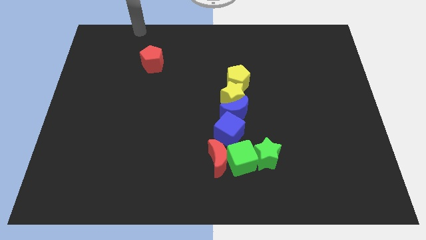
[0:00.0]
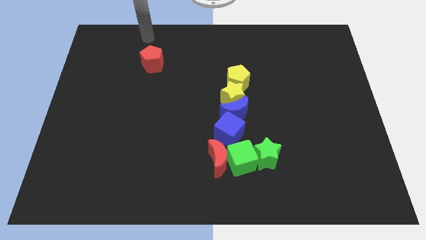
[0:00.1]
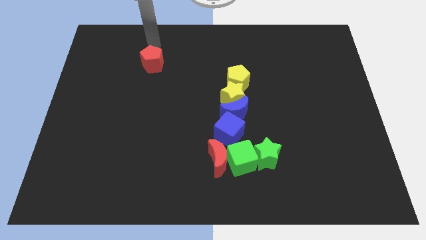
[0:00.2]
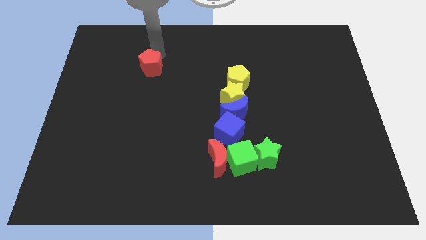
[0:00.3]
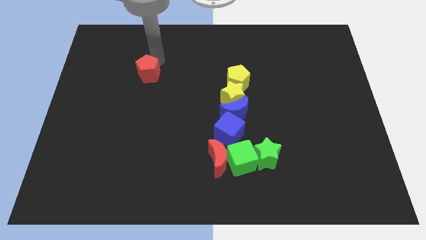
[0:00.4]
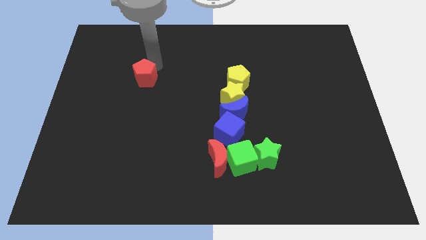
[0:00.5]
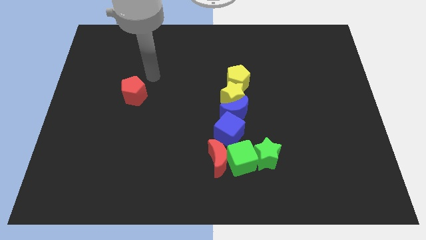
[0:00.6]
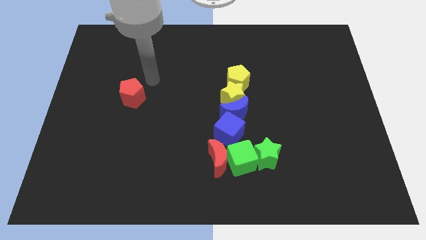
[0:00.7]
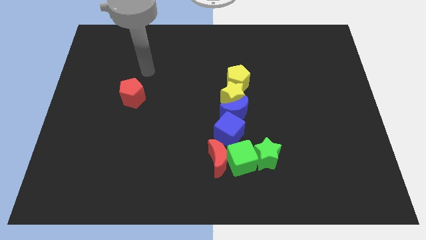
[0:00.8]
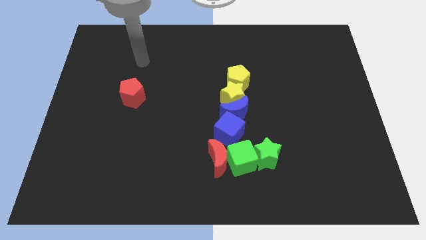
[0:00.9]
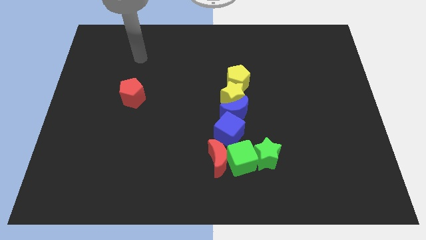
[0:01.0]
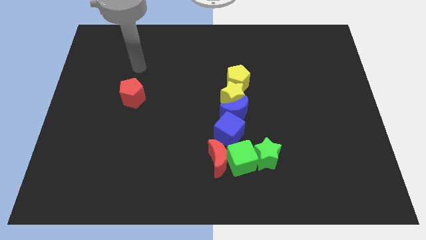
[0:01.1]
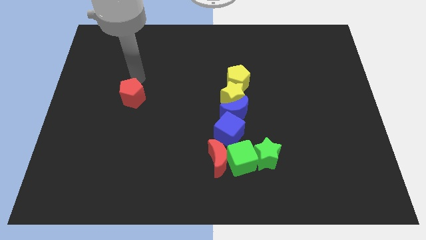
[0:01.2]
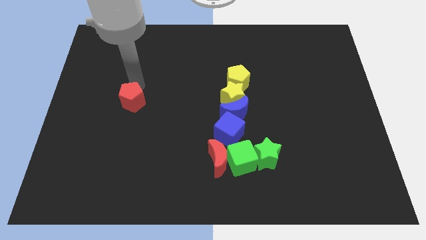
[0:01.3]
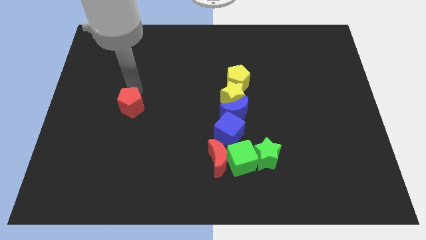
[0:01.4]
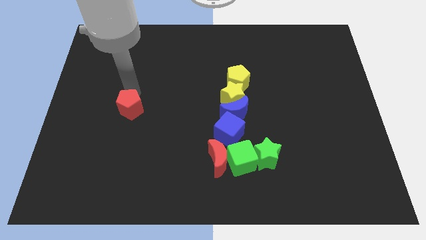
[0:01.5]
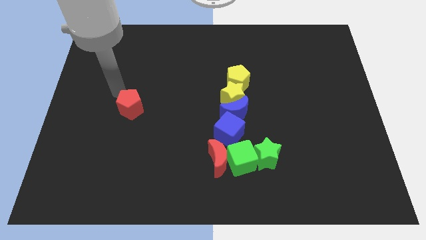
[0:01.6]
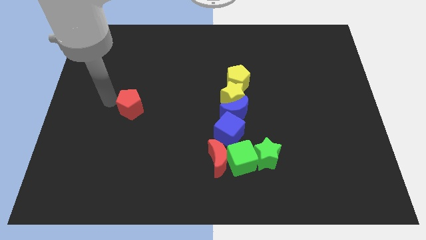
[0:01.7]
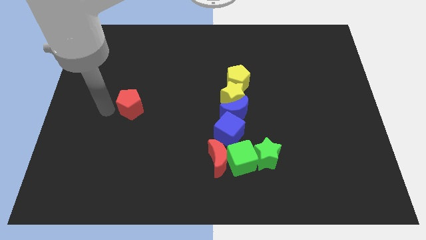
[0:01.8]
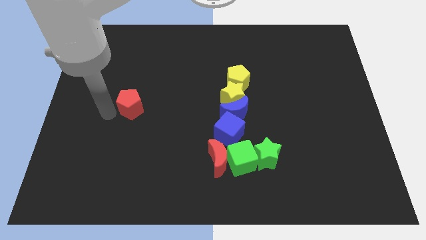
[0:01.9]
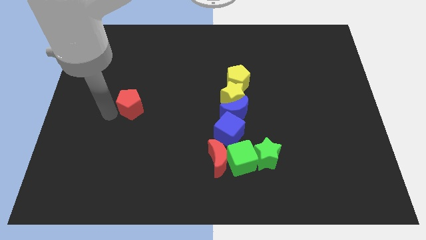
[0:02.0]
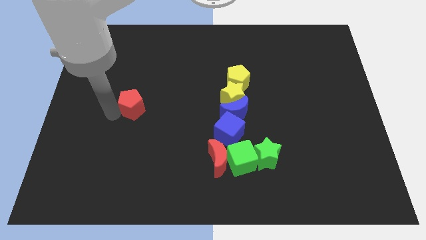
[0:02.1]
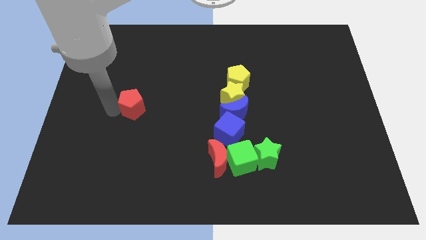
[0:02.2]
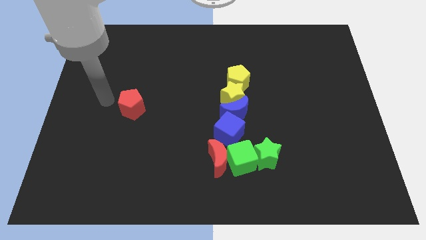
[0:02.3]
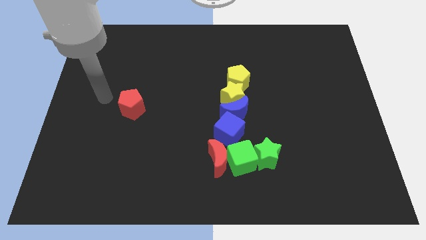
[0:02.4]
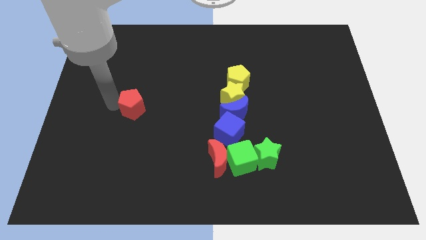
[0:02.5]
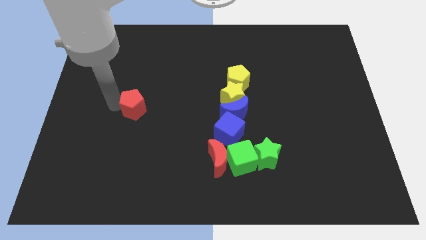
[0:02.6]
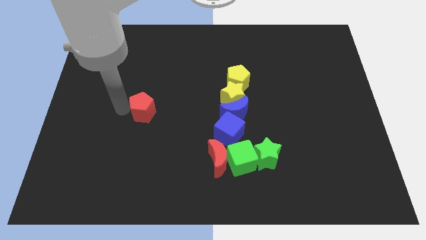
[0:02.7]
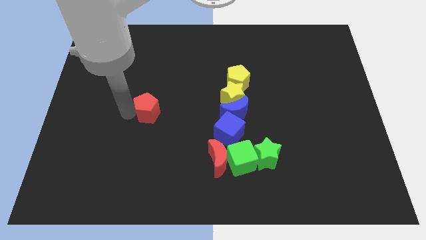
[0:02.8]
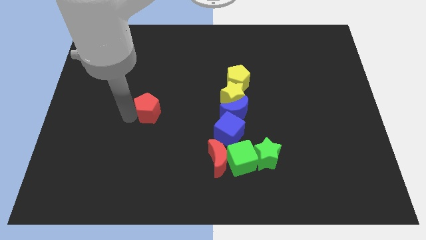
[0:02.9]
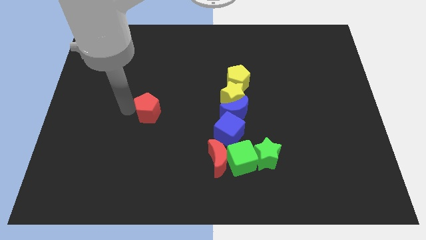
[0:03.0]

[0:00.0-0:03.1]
move the red pentagon to the left of the blue blocks

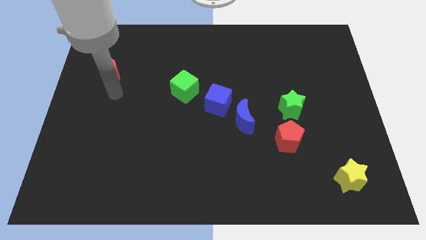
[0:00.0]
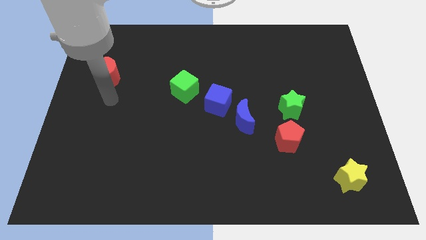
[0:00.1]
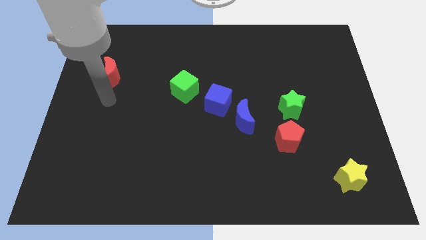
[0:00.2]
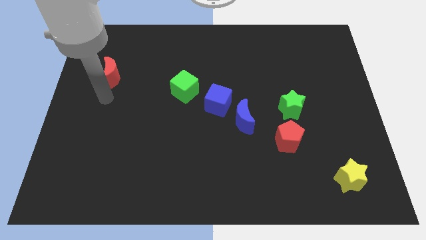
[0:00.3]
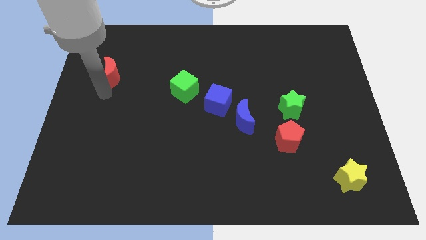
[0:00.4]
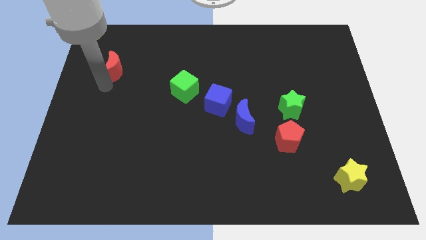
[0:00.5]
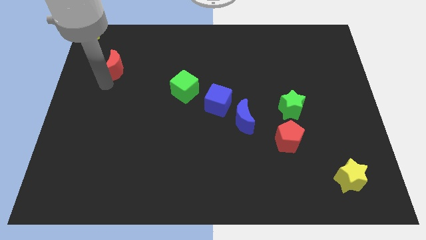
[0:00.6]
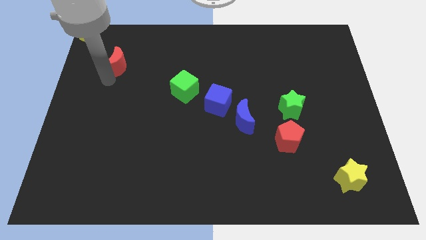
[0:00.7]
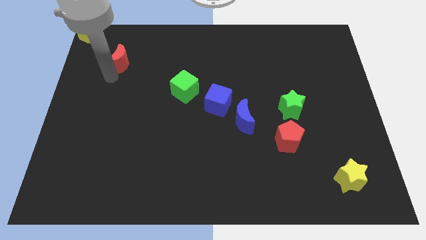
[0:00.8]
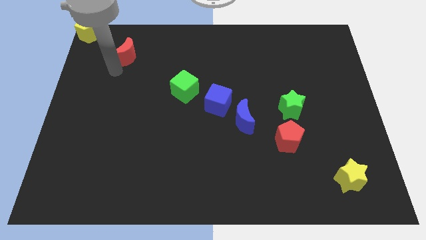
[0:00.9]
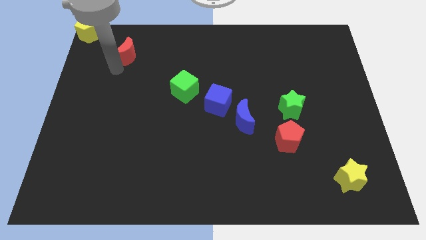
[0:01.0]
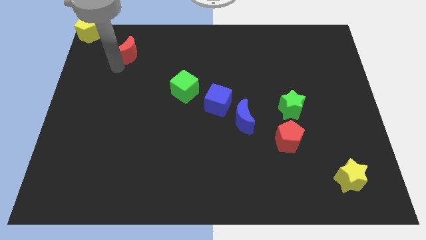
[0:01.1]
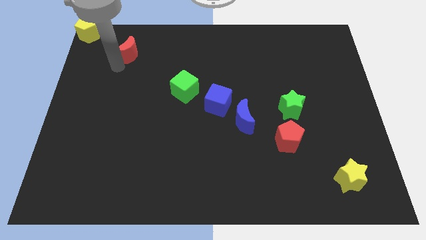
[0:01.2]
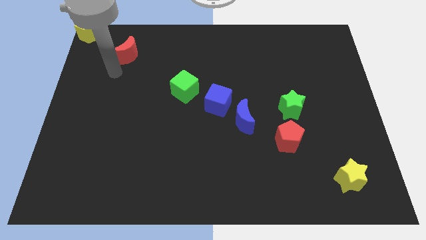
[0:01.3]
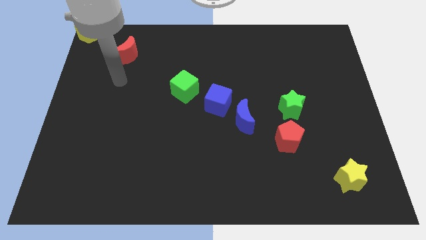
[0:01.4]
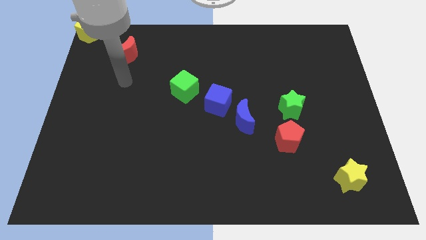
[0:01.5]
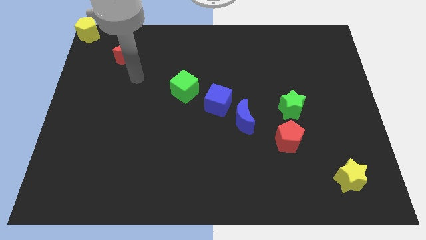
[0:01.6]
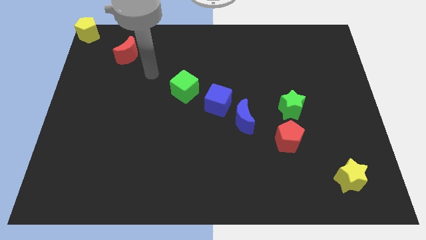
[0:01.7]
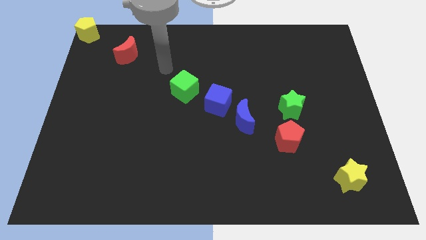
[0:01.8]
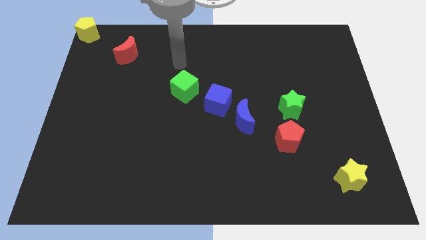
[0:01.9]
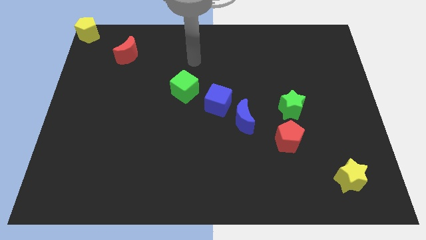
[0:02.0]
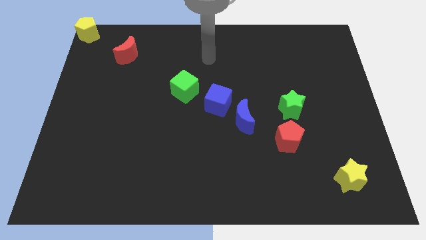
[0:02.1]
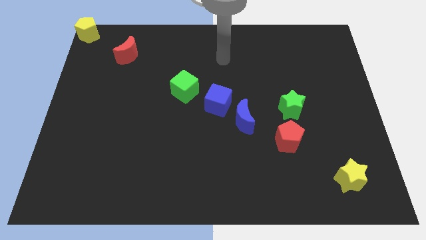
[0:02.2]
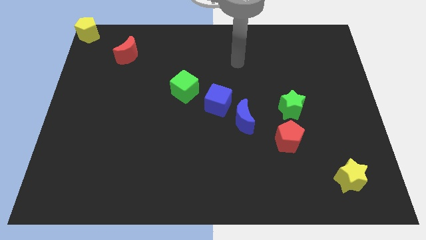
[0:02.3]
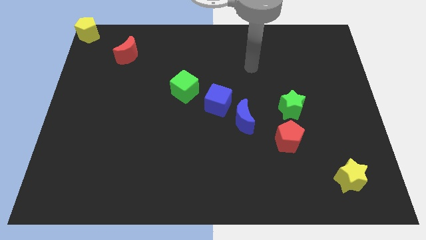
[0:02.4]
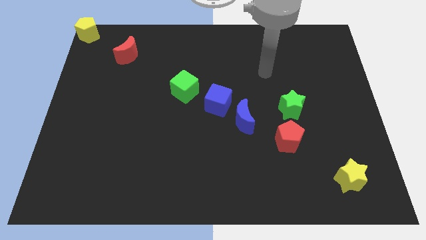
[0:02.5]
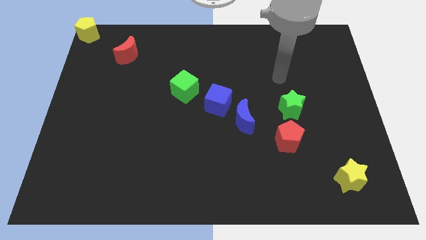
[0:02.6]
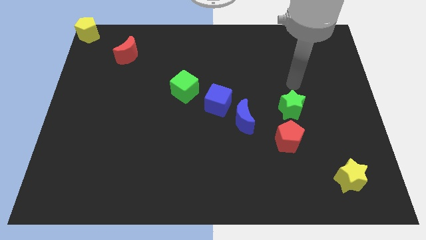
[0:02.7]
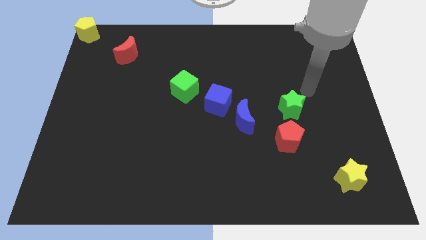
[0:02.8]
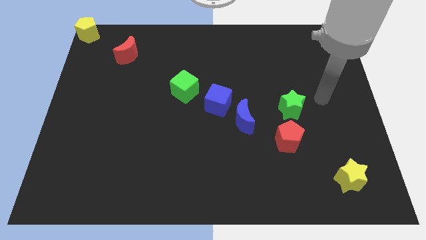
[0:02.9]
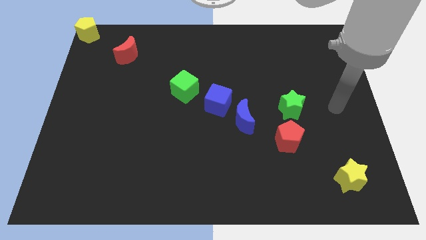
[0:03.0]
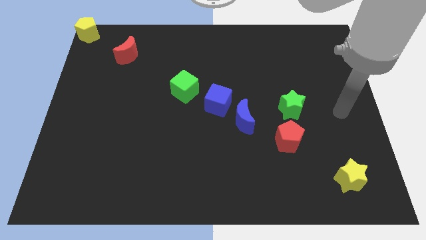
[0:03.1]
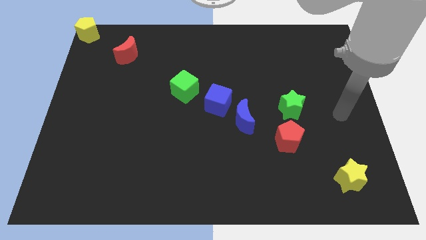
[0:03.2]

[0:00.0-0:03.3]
put the red moon in between the yellow pentagon and green cube

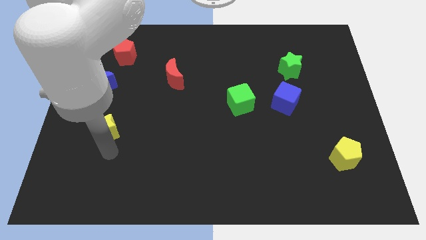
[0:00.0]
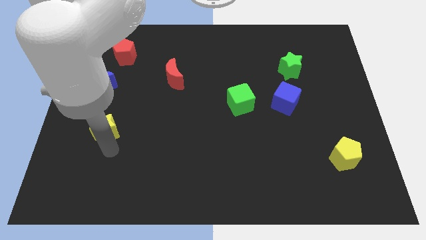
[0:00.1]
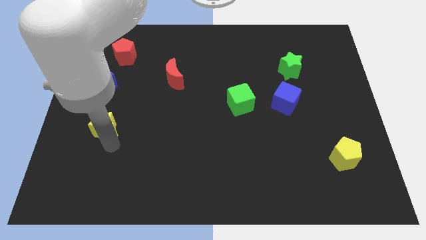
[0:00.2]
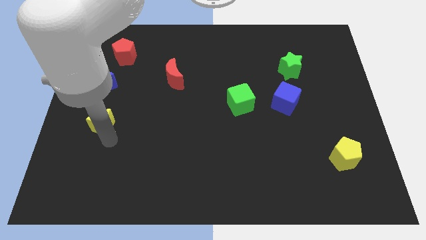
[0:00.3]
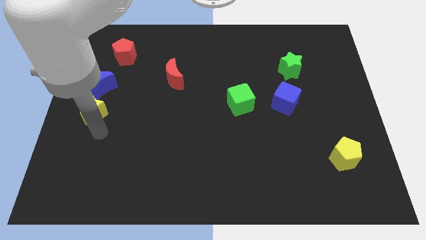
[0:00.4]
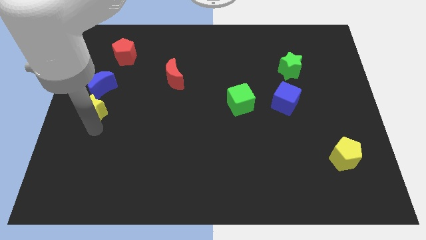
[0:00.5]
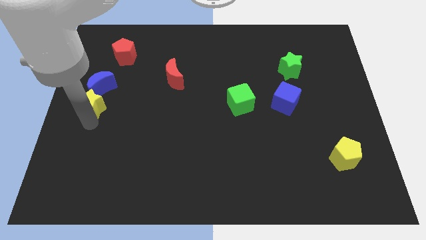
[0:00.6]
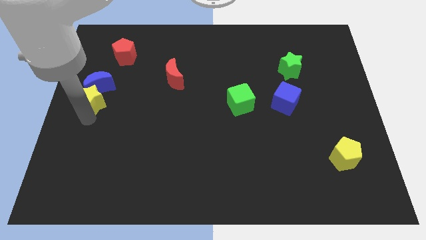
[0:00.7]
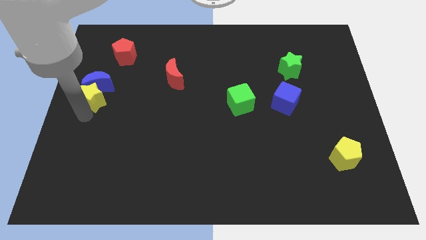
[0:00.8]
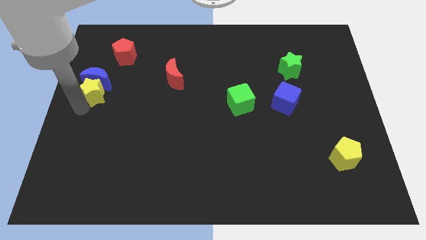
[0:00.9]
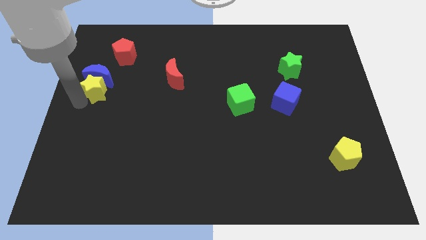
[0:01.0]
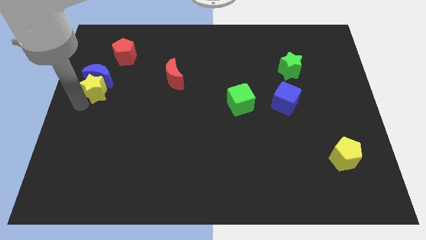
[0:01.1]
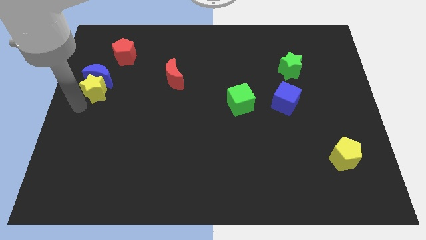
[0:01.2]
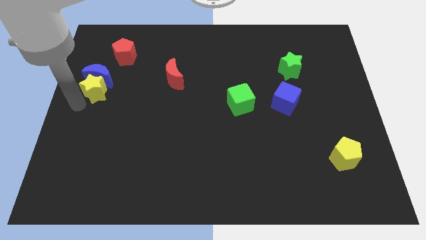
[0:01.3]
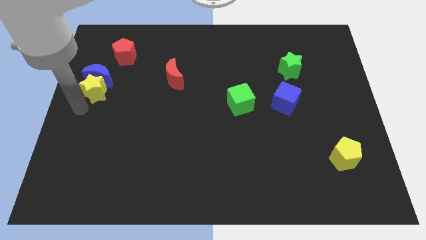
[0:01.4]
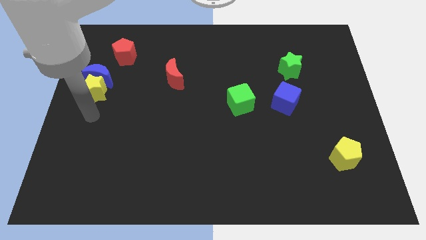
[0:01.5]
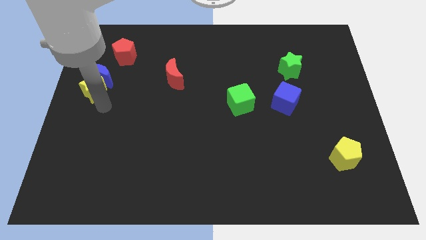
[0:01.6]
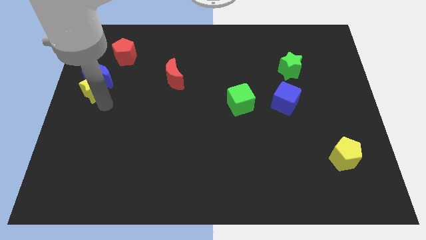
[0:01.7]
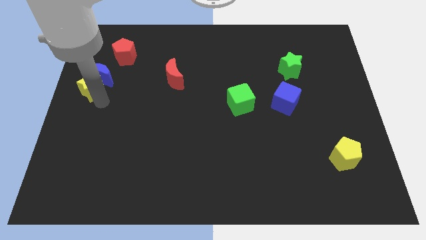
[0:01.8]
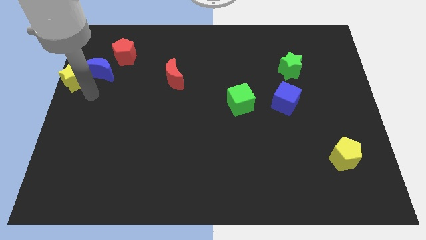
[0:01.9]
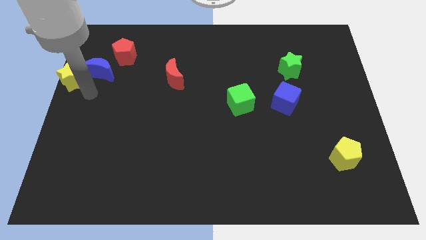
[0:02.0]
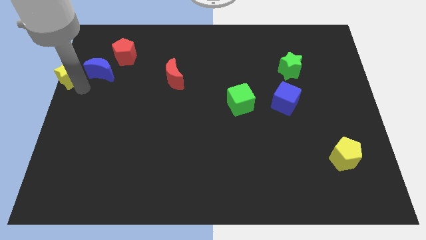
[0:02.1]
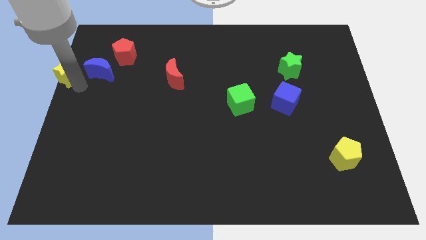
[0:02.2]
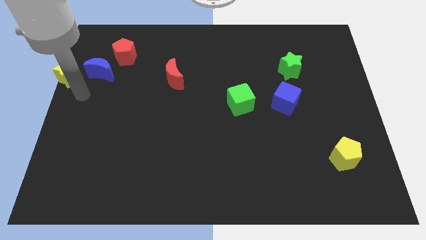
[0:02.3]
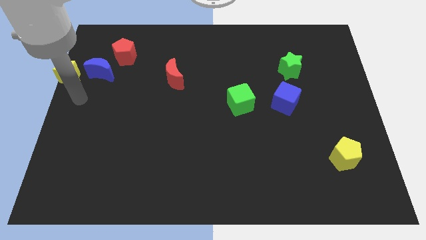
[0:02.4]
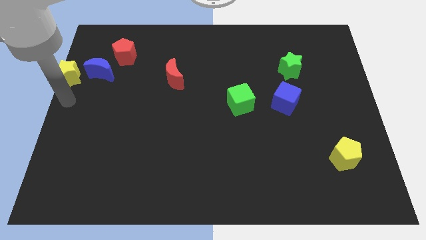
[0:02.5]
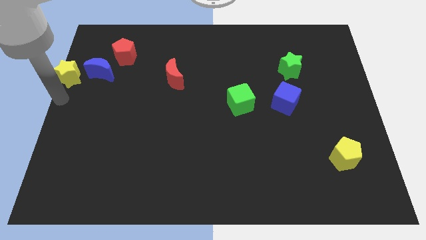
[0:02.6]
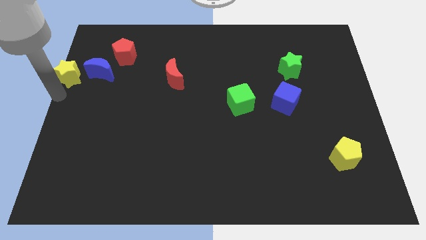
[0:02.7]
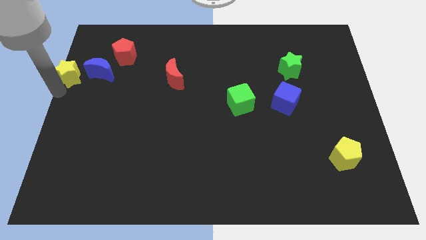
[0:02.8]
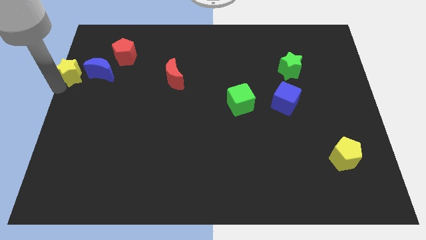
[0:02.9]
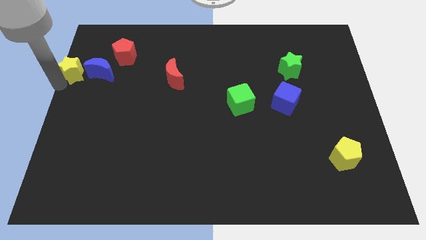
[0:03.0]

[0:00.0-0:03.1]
push yellow star beside blue crescent
